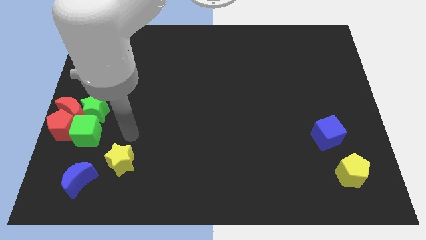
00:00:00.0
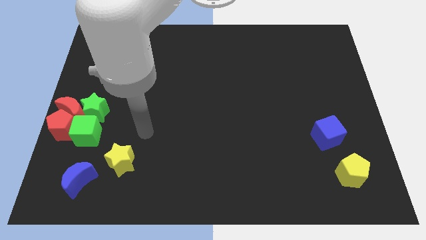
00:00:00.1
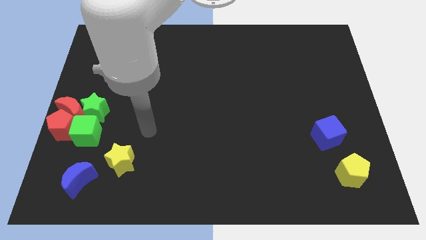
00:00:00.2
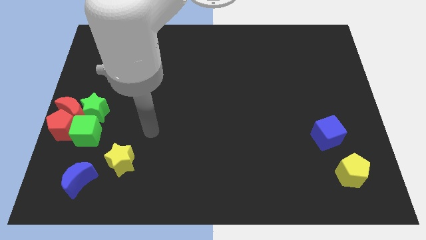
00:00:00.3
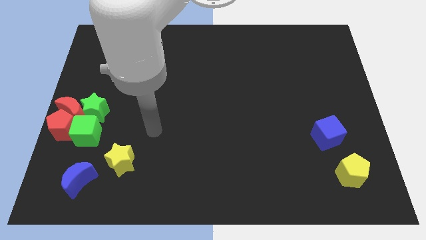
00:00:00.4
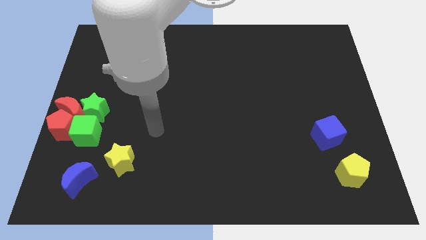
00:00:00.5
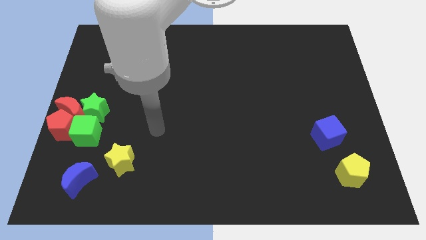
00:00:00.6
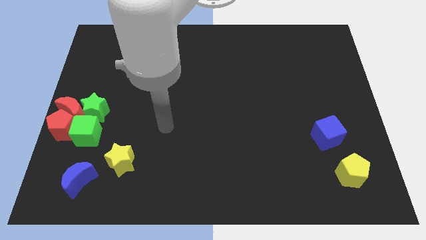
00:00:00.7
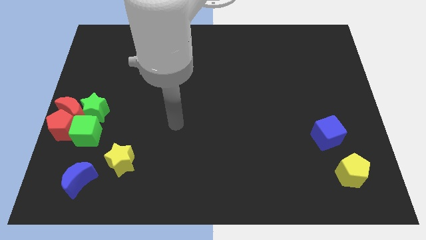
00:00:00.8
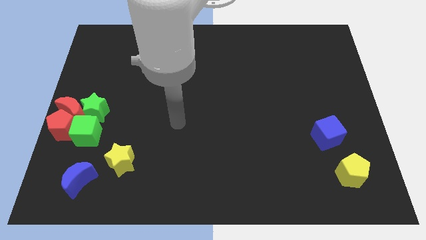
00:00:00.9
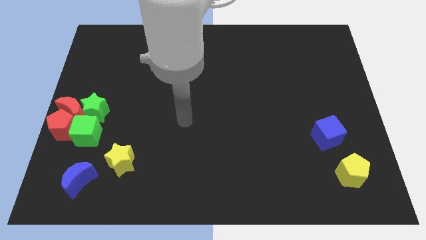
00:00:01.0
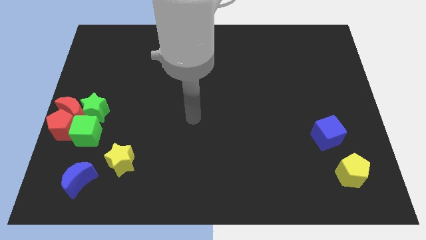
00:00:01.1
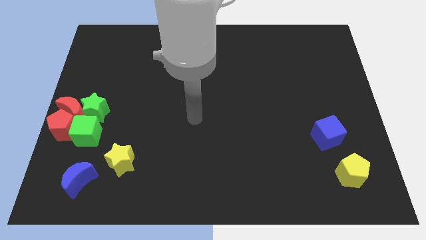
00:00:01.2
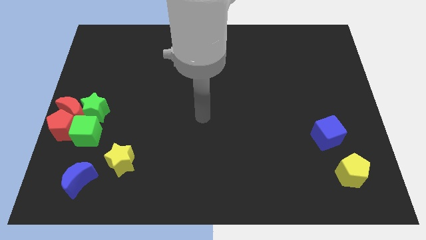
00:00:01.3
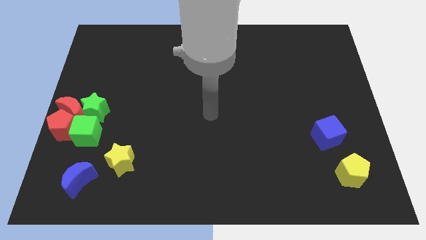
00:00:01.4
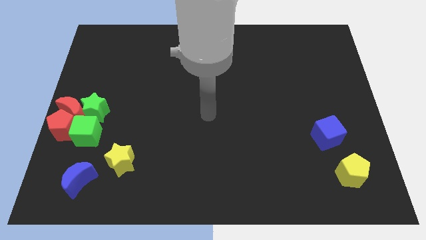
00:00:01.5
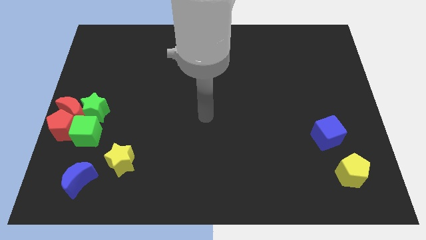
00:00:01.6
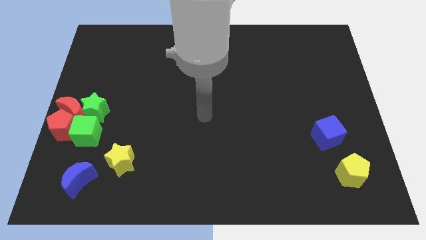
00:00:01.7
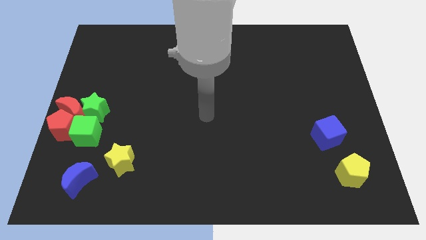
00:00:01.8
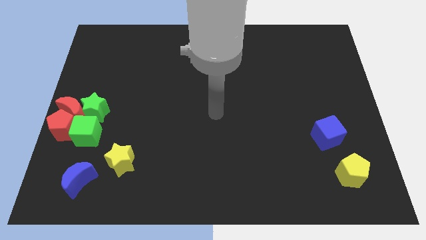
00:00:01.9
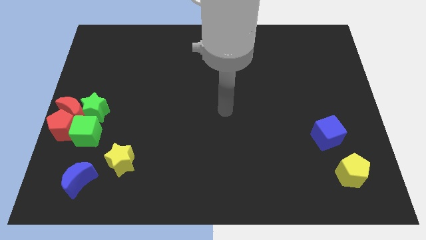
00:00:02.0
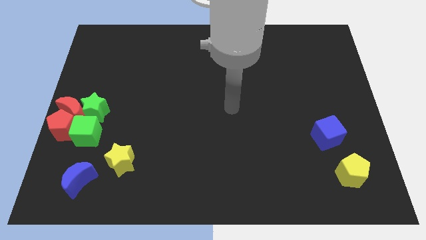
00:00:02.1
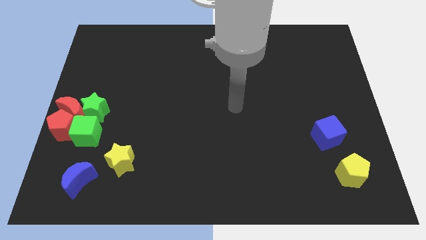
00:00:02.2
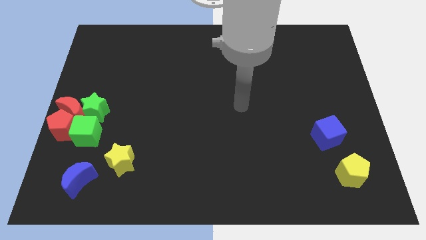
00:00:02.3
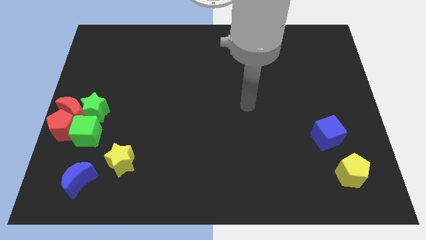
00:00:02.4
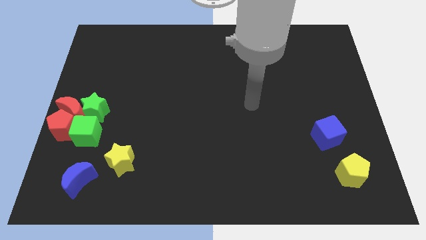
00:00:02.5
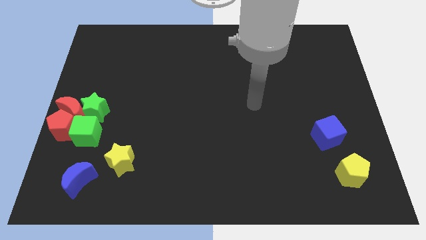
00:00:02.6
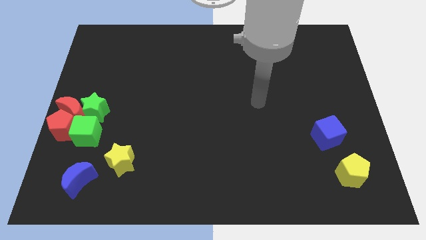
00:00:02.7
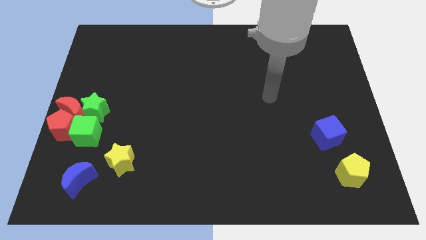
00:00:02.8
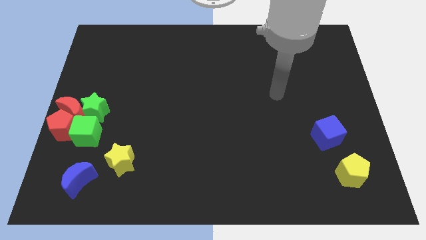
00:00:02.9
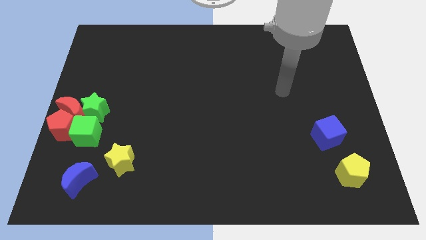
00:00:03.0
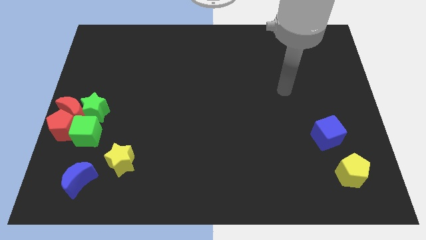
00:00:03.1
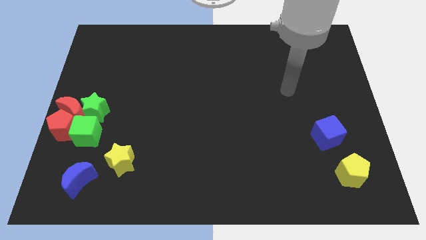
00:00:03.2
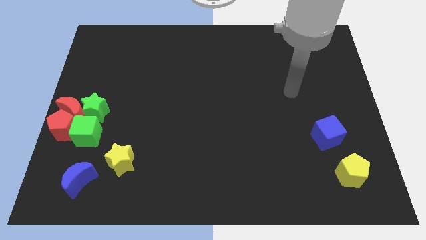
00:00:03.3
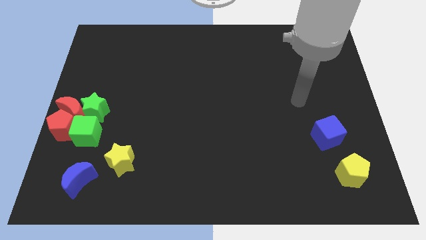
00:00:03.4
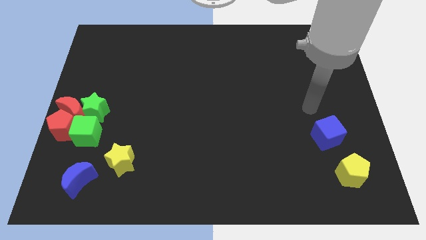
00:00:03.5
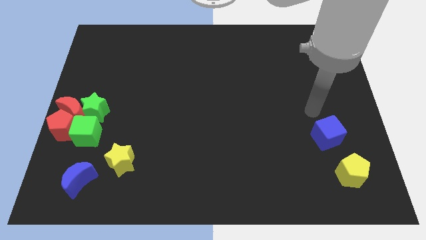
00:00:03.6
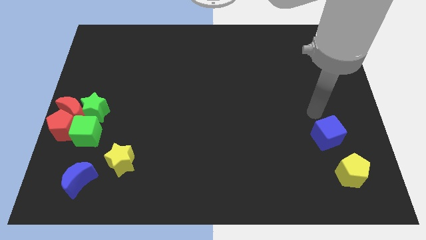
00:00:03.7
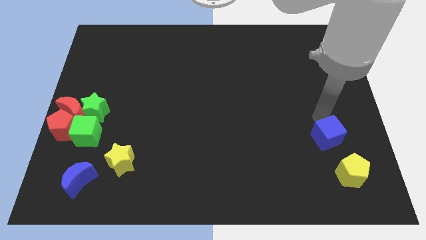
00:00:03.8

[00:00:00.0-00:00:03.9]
place your hand vertically above the blue cube

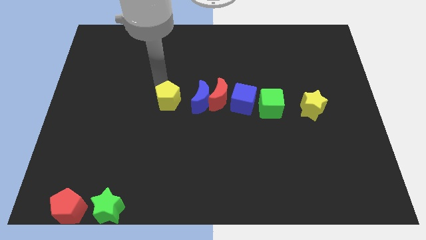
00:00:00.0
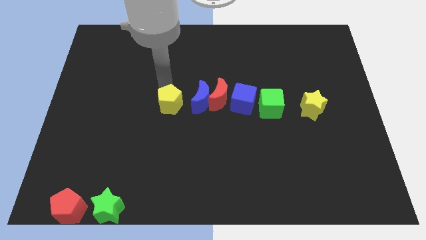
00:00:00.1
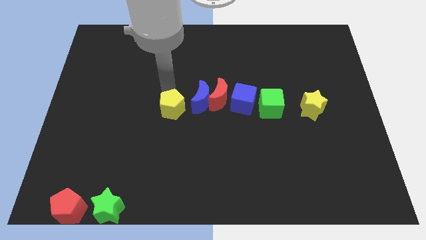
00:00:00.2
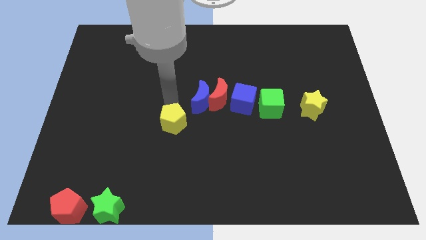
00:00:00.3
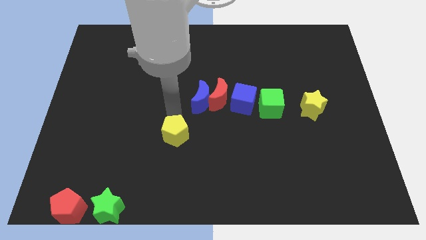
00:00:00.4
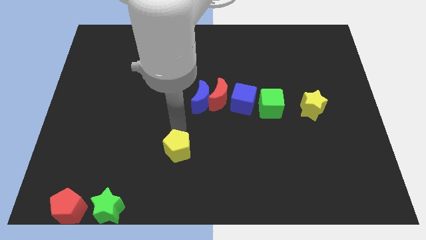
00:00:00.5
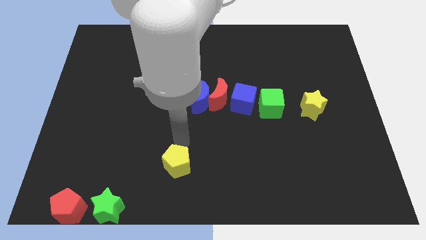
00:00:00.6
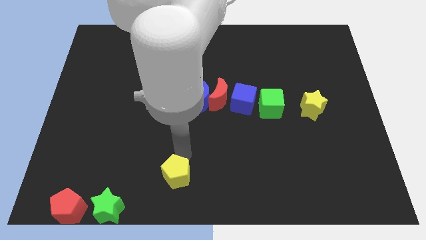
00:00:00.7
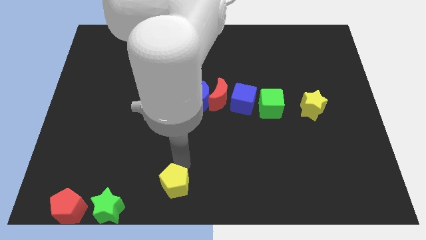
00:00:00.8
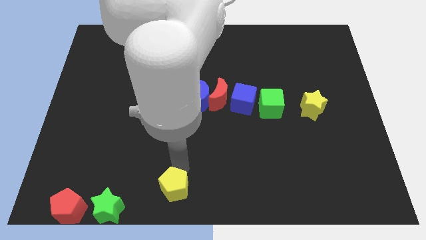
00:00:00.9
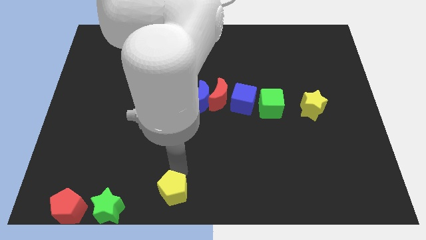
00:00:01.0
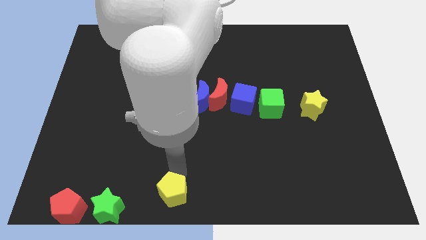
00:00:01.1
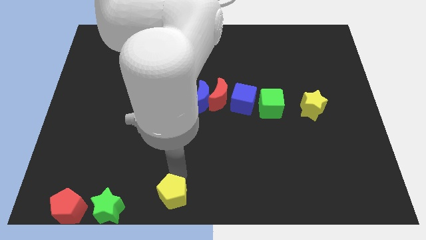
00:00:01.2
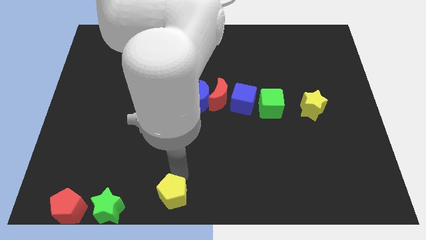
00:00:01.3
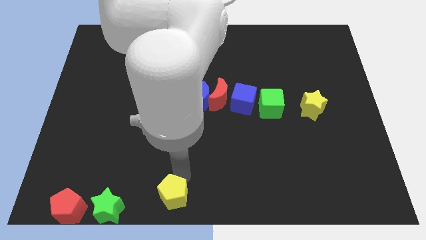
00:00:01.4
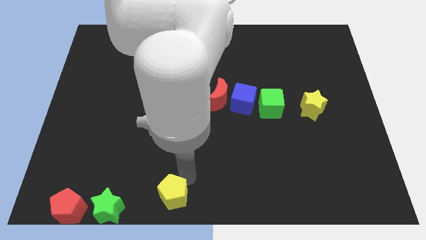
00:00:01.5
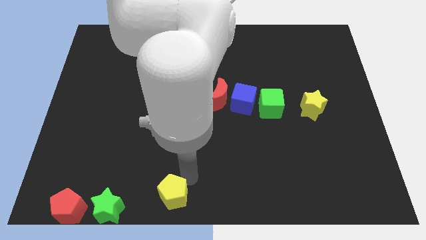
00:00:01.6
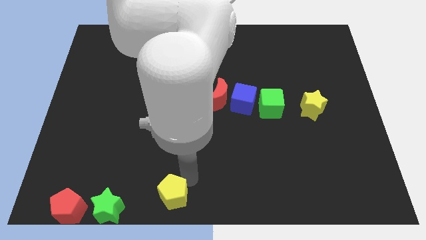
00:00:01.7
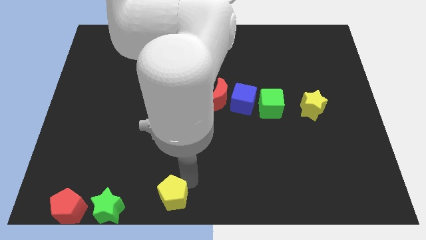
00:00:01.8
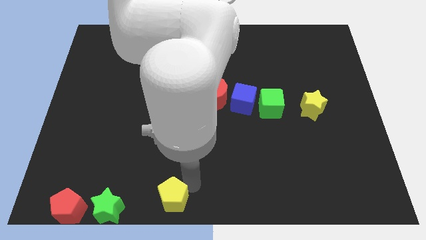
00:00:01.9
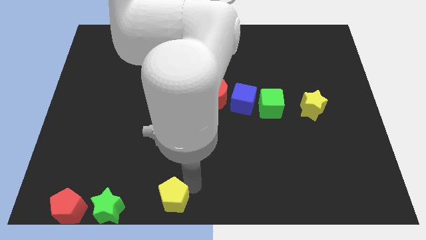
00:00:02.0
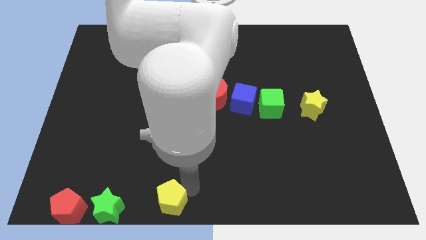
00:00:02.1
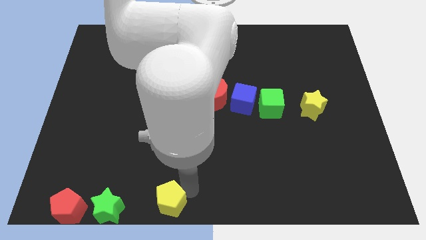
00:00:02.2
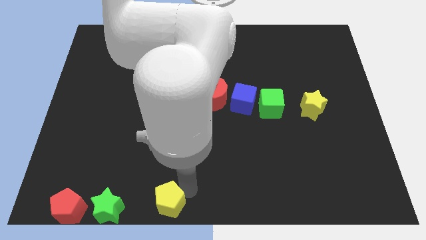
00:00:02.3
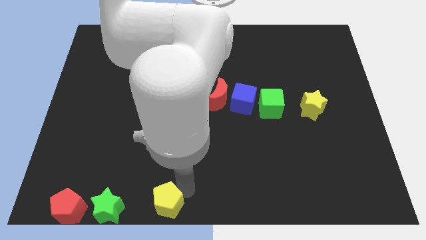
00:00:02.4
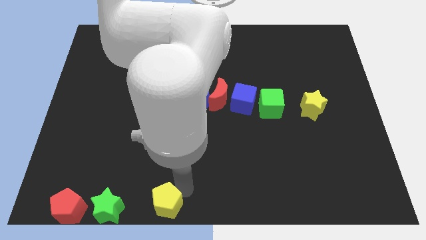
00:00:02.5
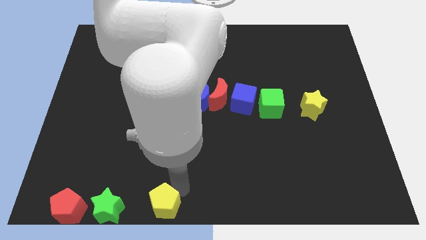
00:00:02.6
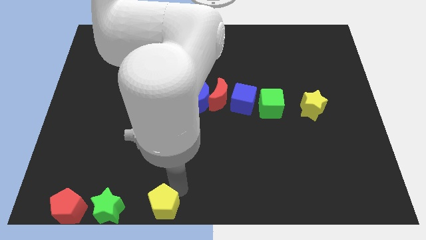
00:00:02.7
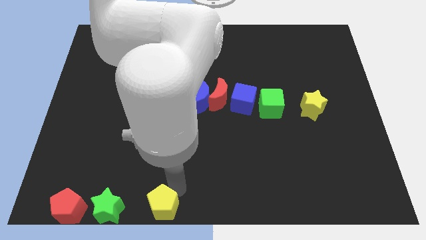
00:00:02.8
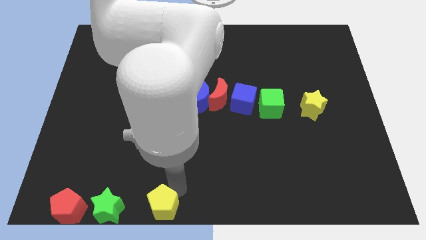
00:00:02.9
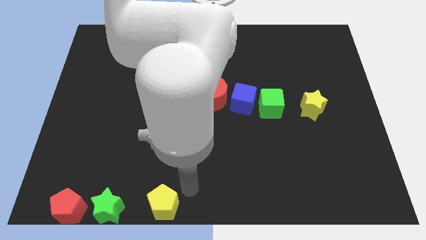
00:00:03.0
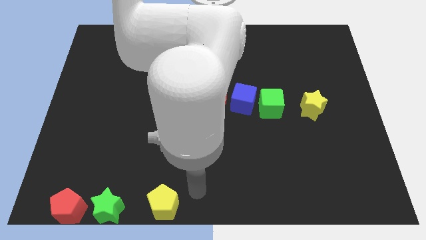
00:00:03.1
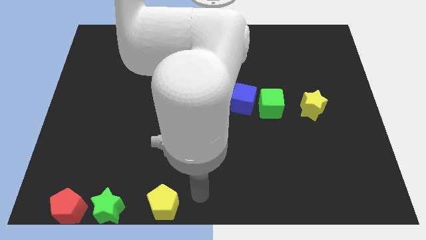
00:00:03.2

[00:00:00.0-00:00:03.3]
slide the yellow pentagon towards right of the green star

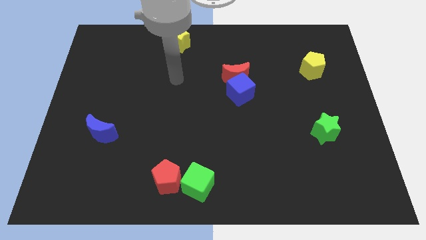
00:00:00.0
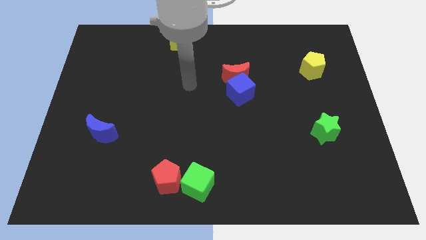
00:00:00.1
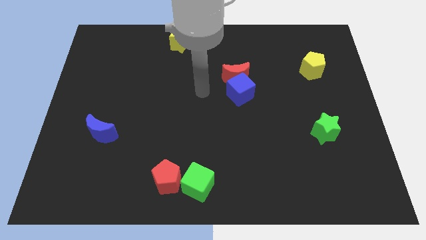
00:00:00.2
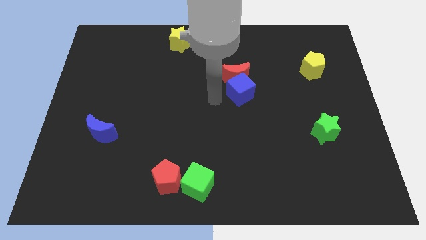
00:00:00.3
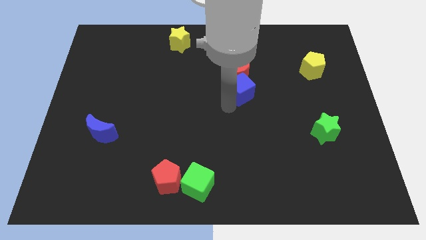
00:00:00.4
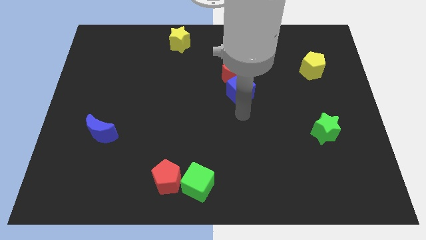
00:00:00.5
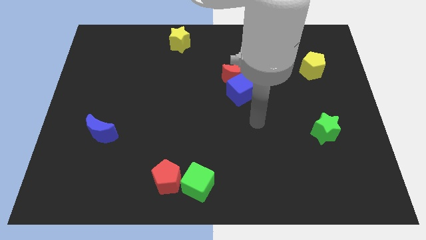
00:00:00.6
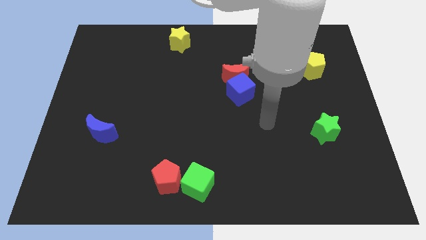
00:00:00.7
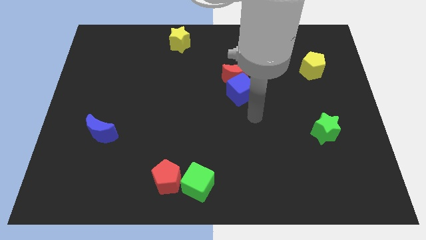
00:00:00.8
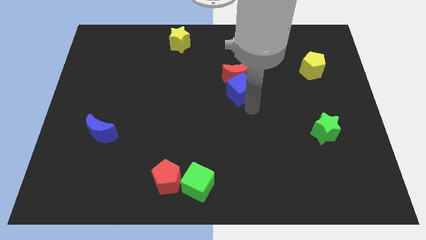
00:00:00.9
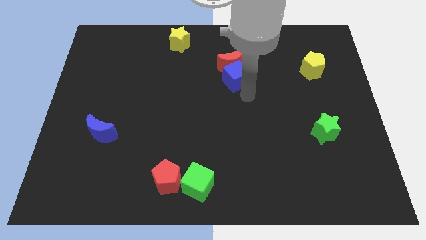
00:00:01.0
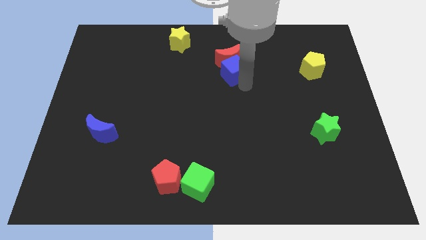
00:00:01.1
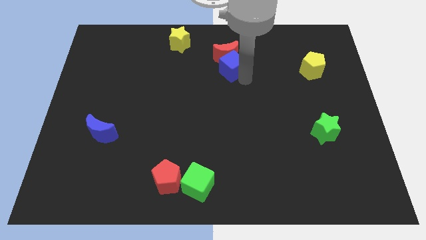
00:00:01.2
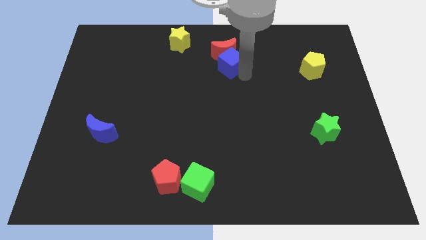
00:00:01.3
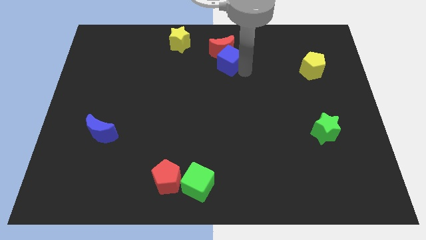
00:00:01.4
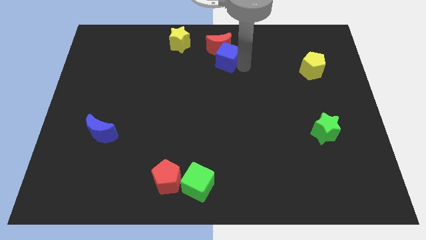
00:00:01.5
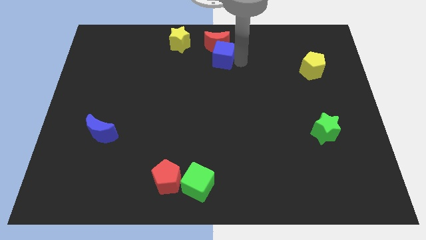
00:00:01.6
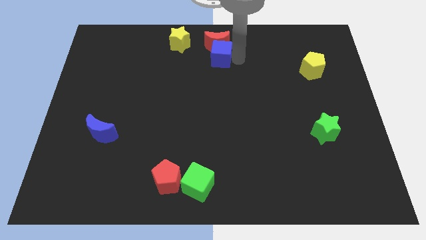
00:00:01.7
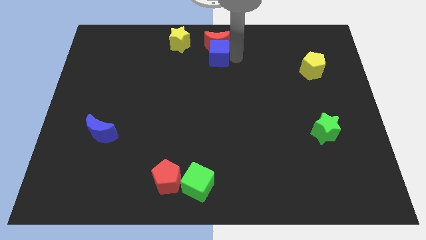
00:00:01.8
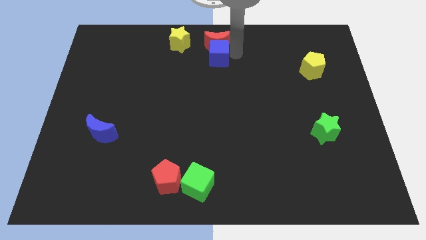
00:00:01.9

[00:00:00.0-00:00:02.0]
place the blue cube along with red crescent at top center of the board

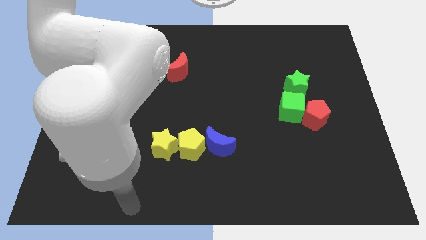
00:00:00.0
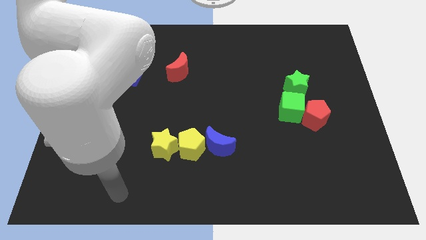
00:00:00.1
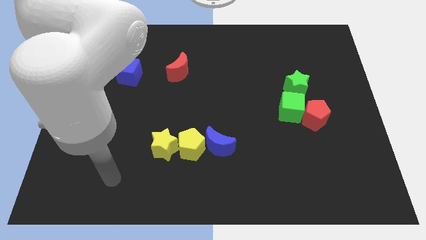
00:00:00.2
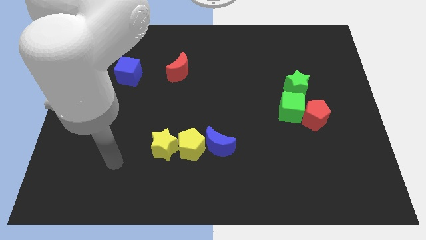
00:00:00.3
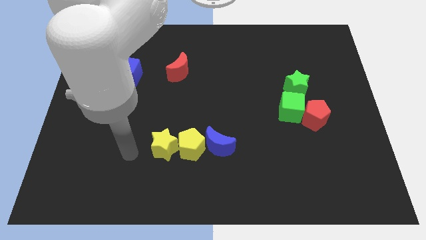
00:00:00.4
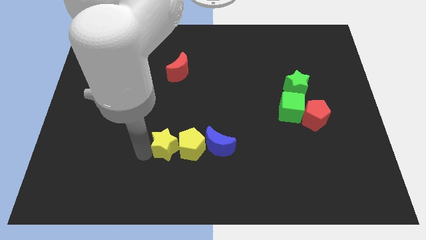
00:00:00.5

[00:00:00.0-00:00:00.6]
place the arm left to the yellow star
